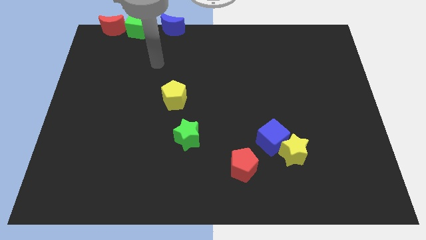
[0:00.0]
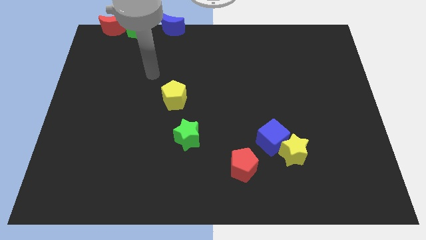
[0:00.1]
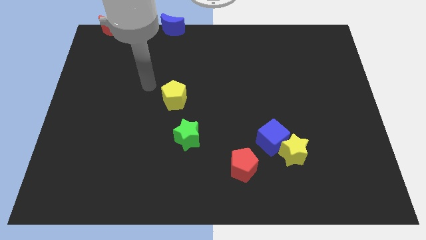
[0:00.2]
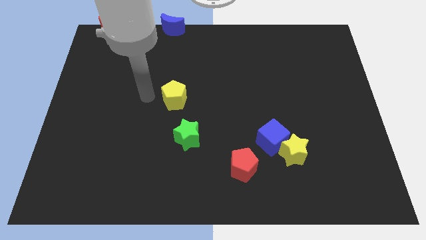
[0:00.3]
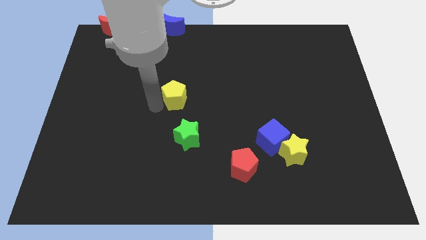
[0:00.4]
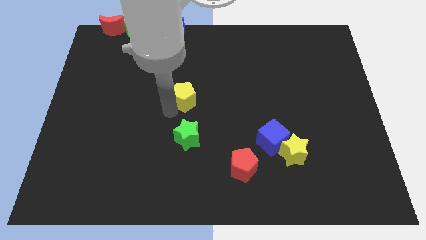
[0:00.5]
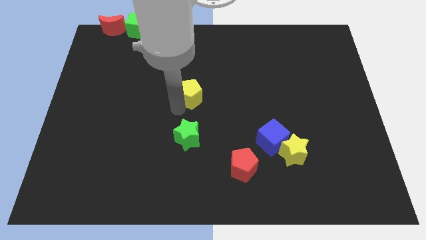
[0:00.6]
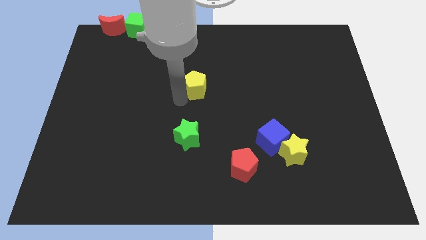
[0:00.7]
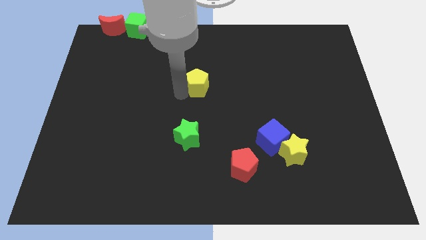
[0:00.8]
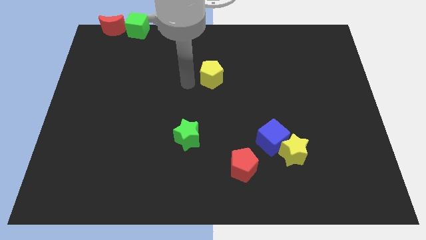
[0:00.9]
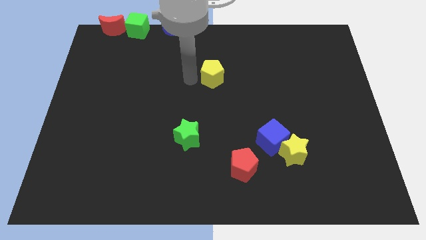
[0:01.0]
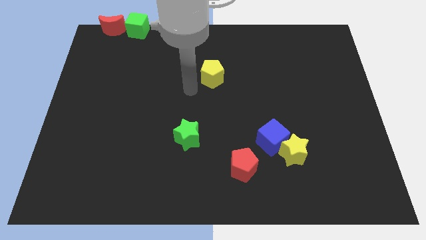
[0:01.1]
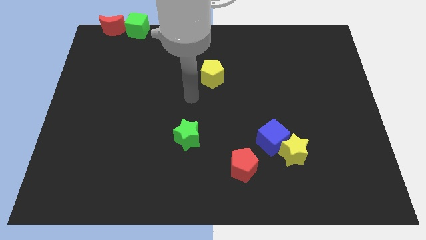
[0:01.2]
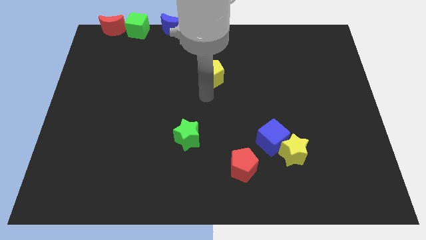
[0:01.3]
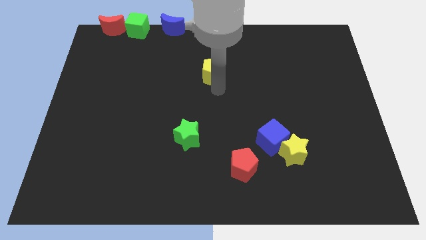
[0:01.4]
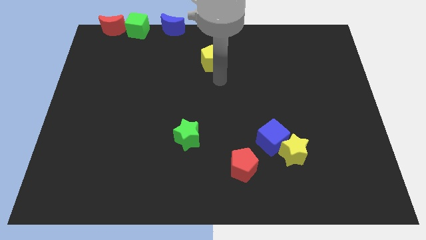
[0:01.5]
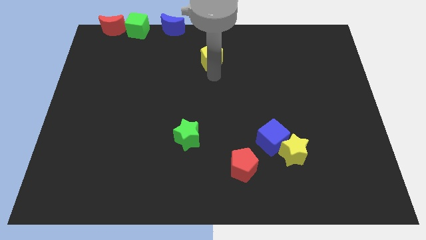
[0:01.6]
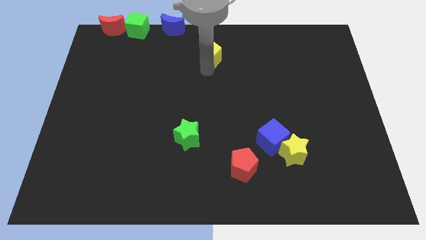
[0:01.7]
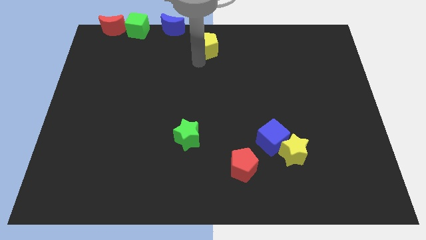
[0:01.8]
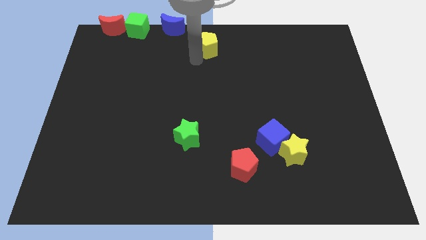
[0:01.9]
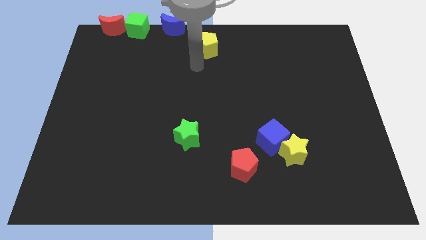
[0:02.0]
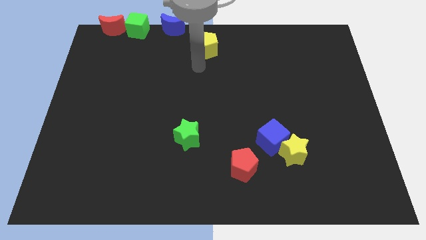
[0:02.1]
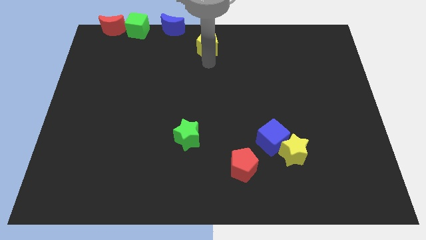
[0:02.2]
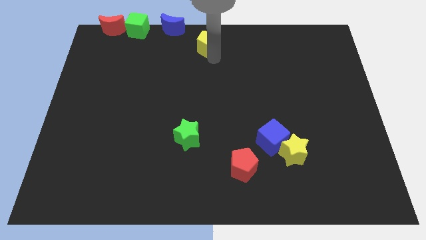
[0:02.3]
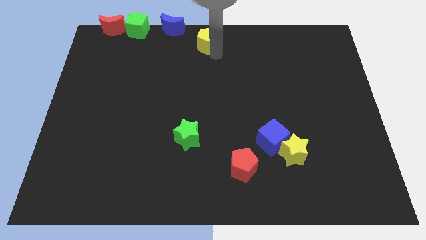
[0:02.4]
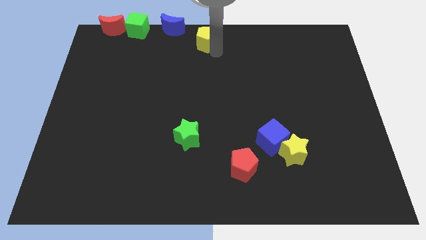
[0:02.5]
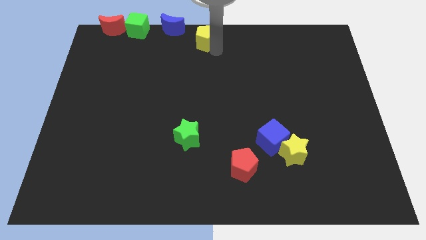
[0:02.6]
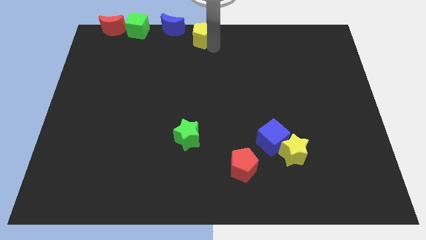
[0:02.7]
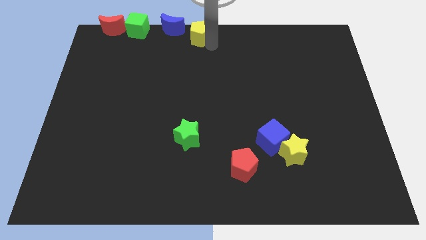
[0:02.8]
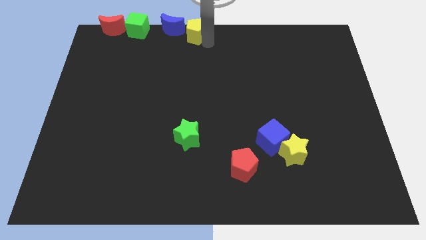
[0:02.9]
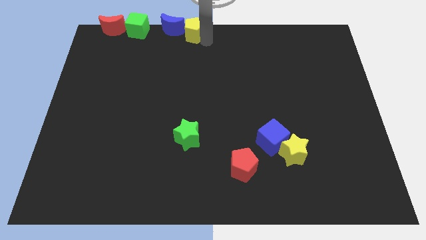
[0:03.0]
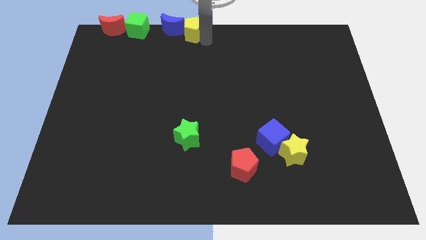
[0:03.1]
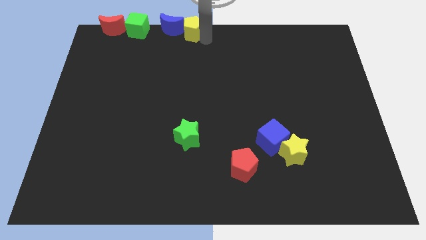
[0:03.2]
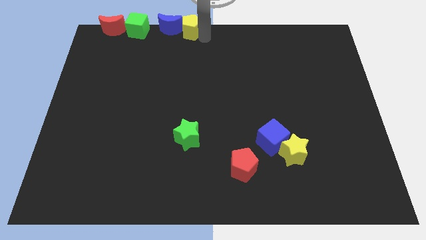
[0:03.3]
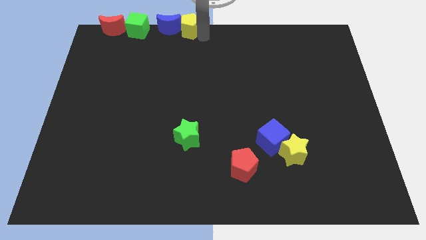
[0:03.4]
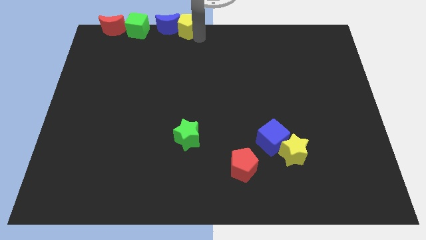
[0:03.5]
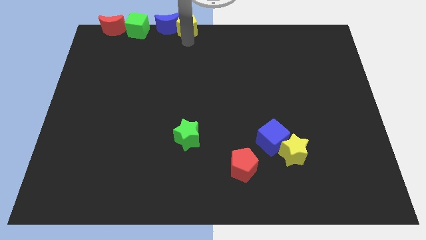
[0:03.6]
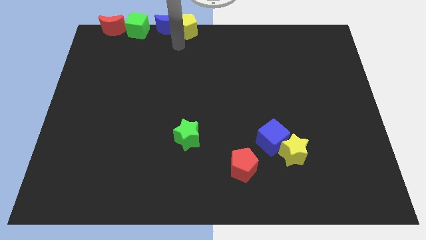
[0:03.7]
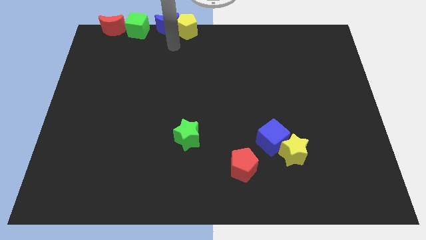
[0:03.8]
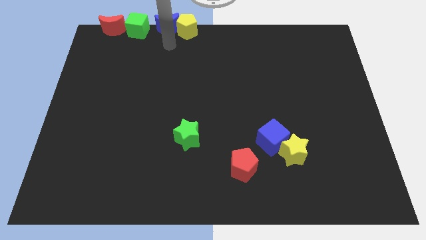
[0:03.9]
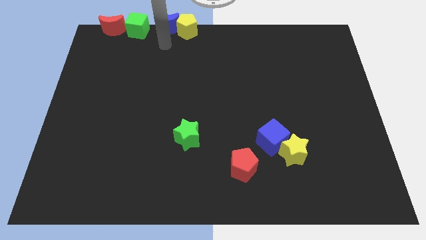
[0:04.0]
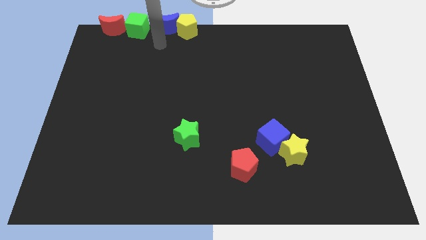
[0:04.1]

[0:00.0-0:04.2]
move the yellow pentagon to the right side of the blue crescent

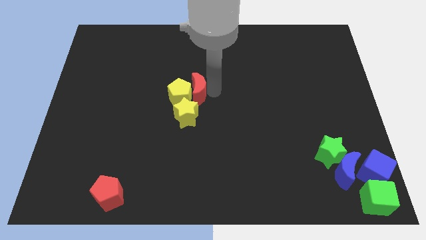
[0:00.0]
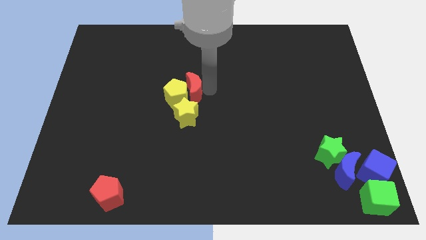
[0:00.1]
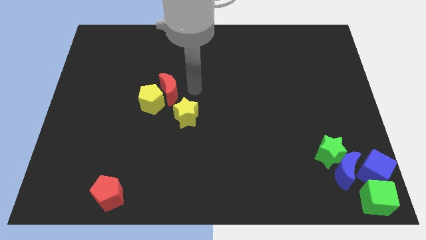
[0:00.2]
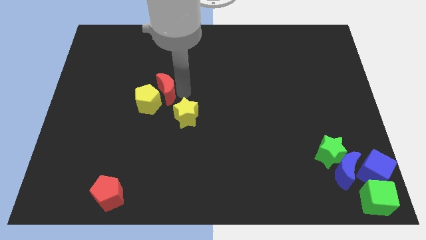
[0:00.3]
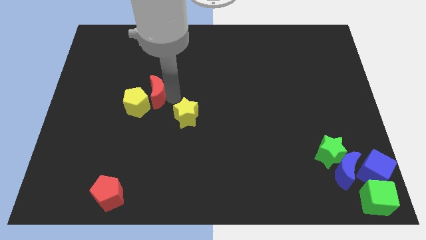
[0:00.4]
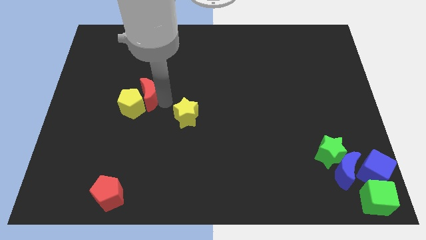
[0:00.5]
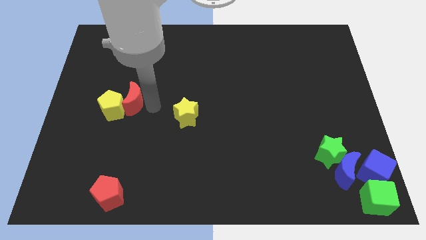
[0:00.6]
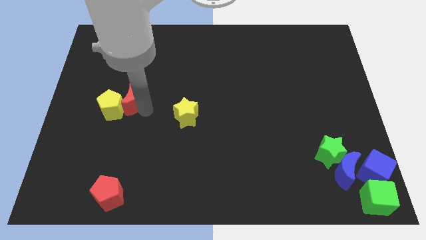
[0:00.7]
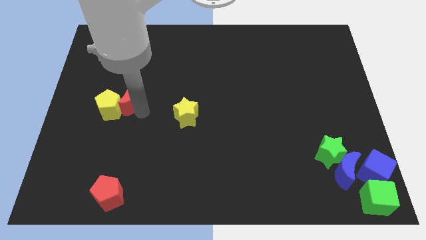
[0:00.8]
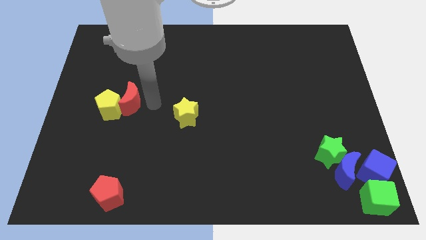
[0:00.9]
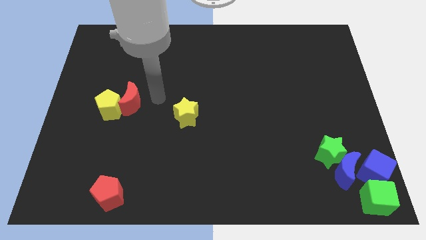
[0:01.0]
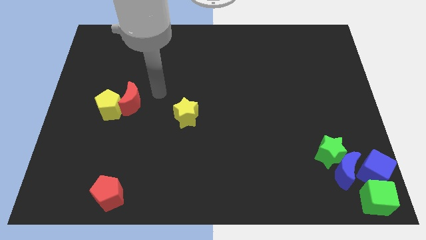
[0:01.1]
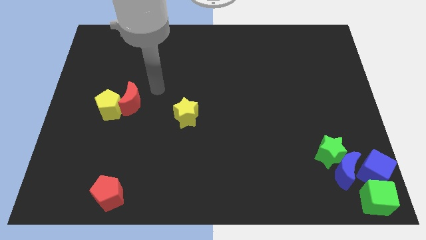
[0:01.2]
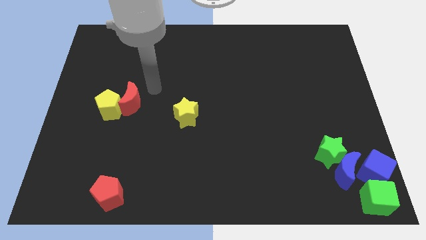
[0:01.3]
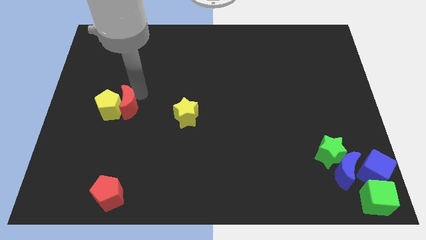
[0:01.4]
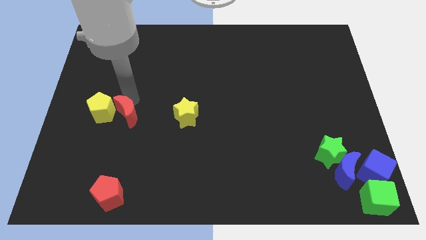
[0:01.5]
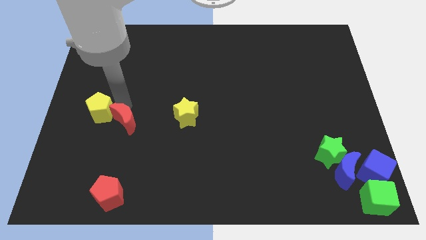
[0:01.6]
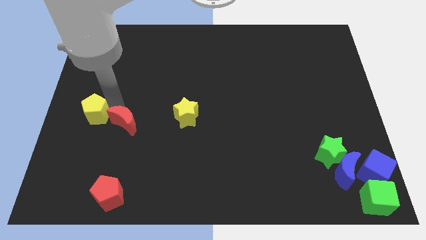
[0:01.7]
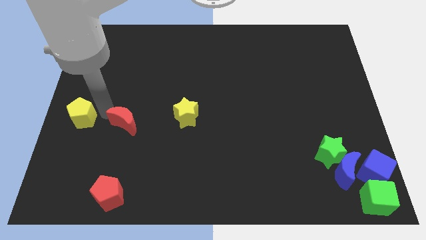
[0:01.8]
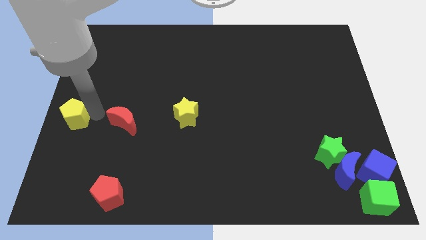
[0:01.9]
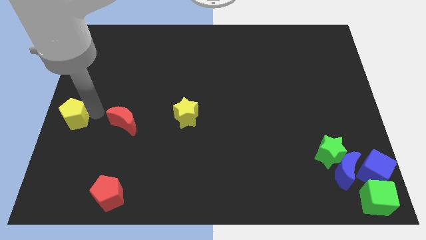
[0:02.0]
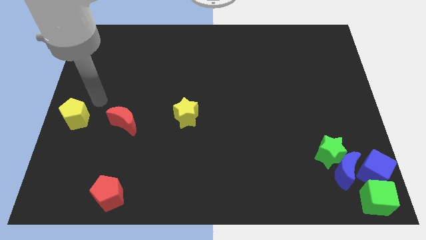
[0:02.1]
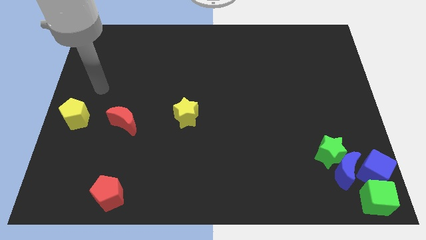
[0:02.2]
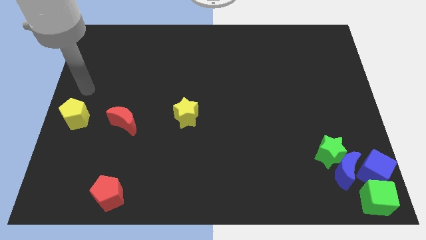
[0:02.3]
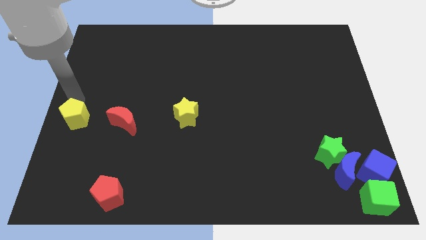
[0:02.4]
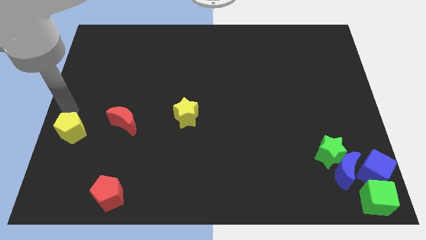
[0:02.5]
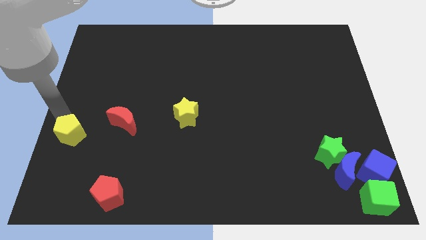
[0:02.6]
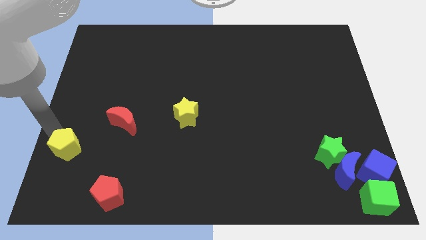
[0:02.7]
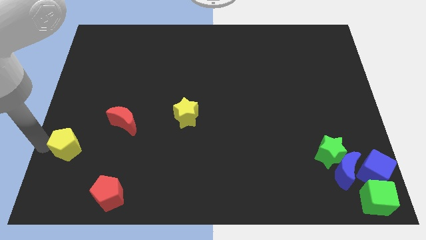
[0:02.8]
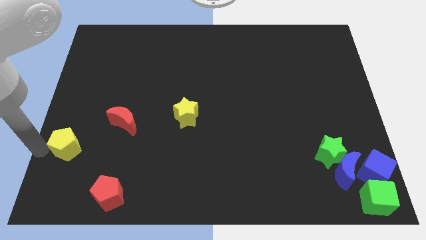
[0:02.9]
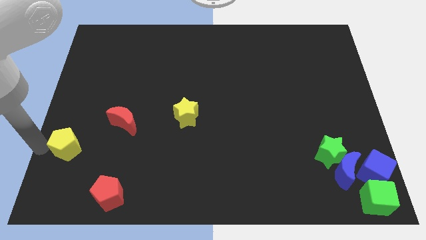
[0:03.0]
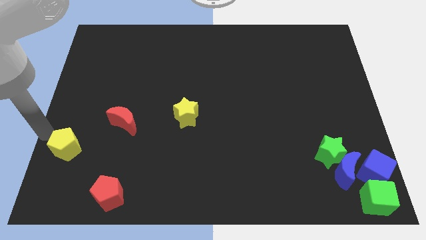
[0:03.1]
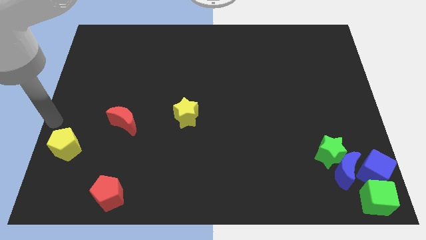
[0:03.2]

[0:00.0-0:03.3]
make a diagonal line out of yellow blocks and the red moon

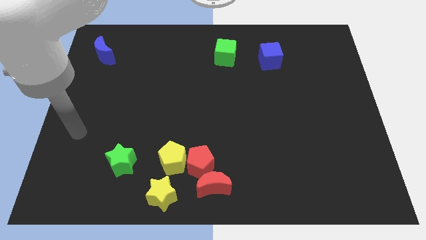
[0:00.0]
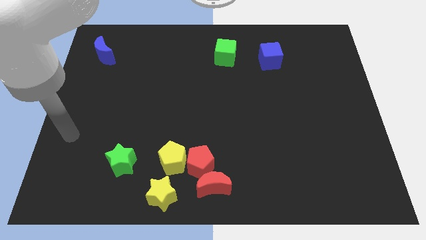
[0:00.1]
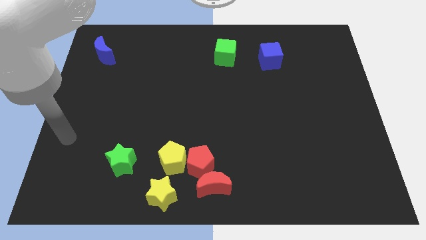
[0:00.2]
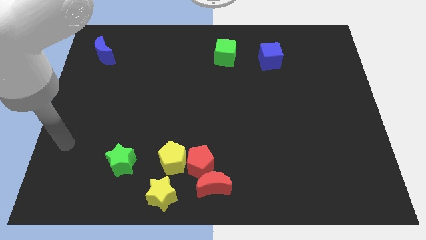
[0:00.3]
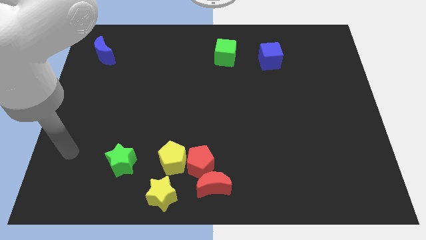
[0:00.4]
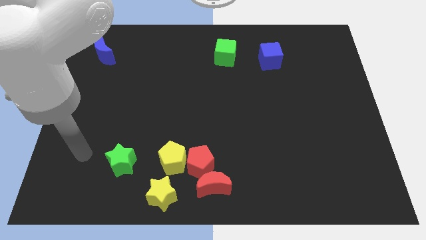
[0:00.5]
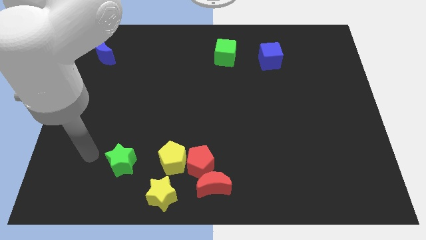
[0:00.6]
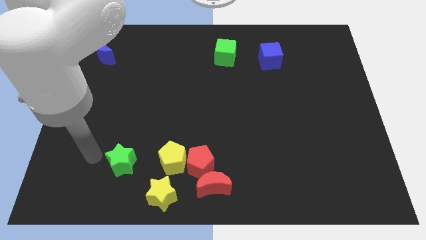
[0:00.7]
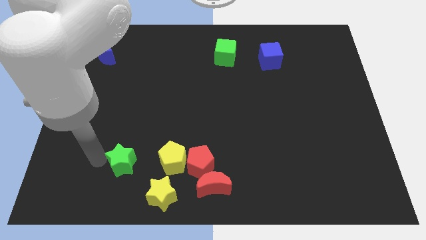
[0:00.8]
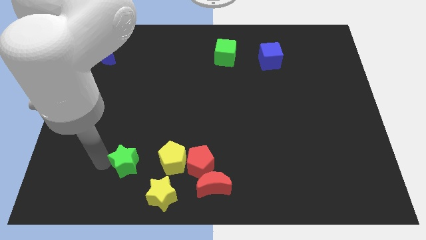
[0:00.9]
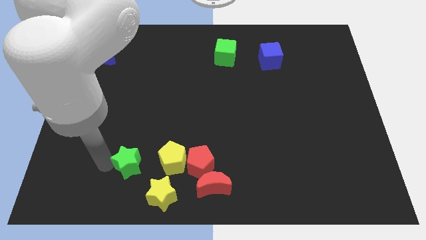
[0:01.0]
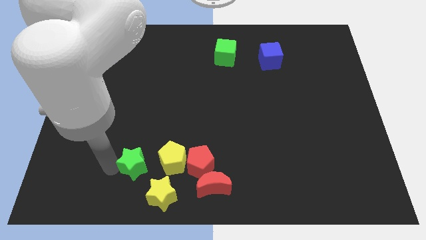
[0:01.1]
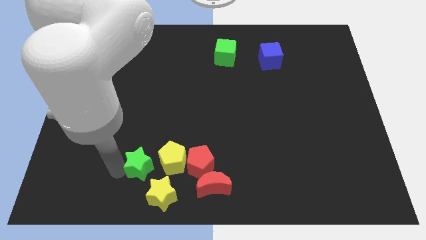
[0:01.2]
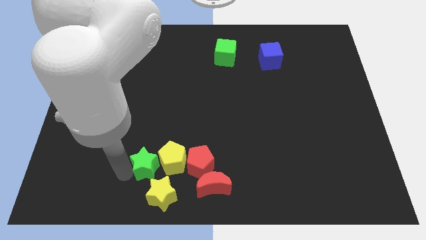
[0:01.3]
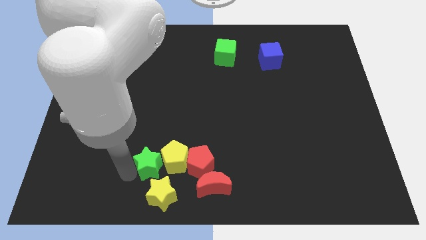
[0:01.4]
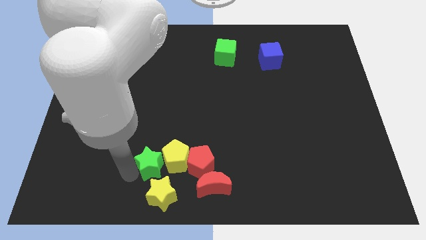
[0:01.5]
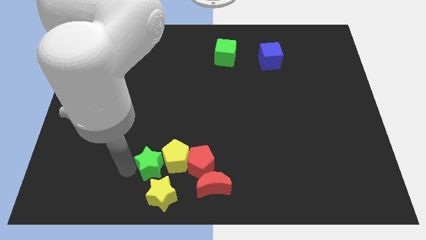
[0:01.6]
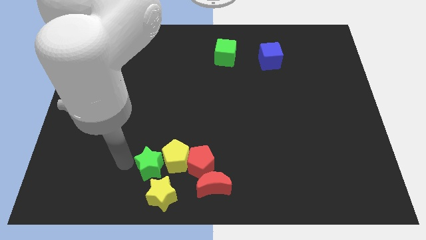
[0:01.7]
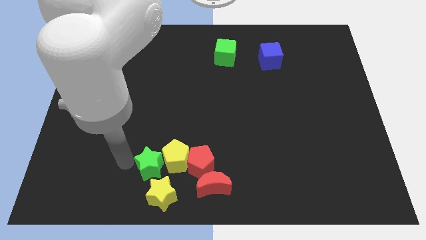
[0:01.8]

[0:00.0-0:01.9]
place the green star left to the yellow pentagon
